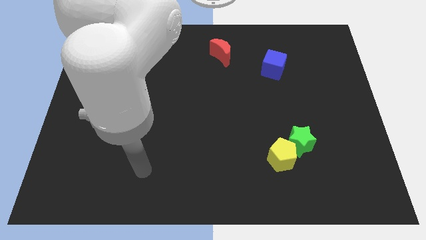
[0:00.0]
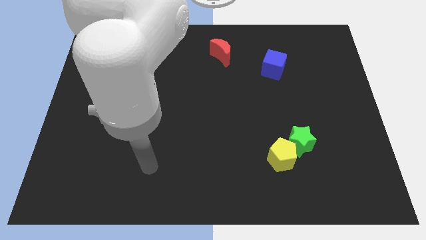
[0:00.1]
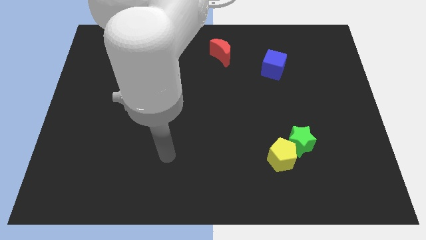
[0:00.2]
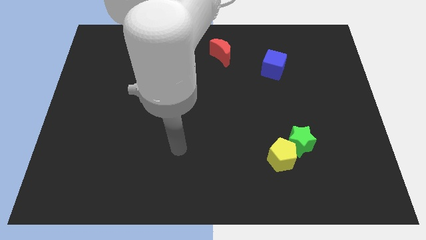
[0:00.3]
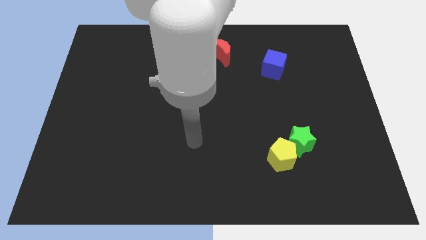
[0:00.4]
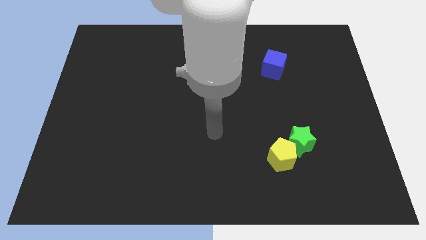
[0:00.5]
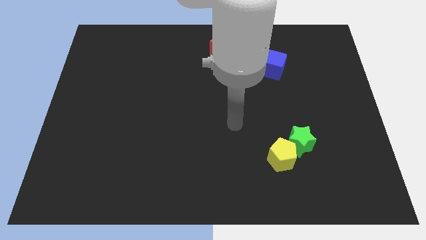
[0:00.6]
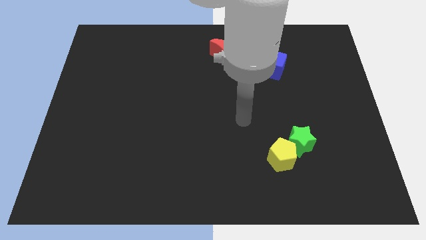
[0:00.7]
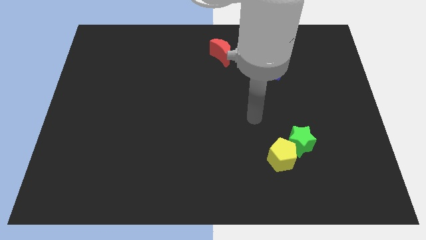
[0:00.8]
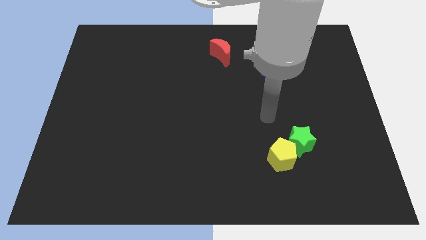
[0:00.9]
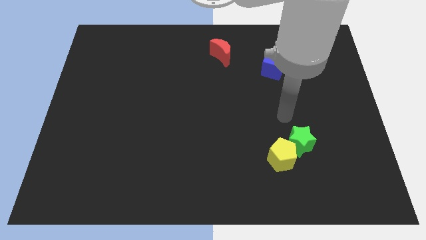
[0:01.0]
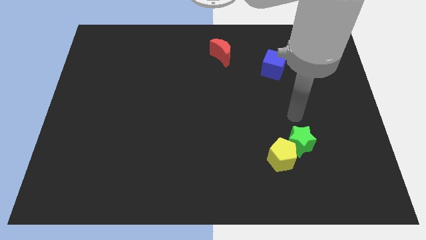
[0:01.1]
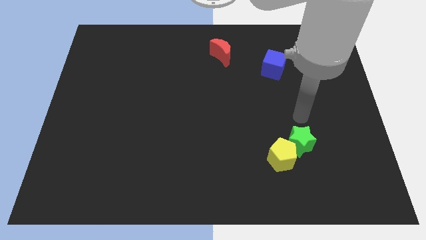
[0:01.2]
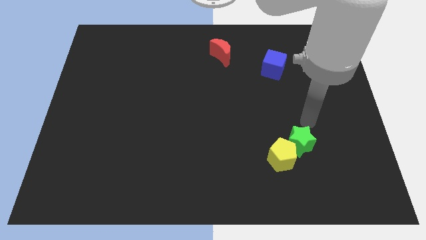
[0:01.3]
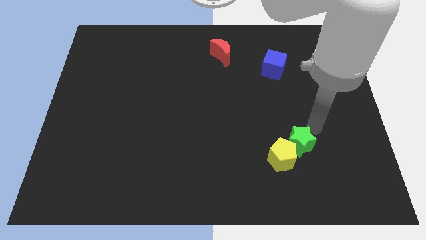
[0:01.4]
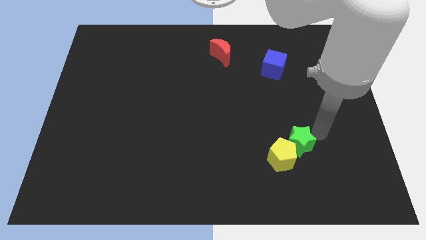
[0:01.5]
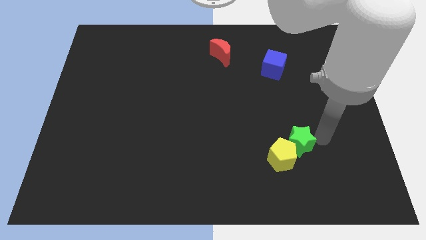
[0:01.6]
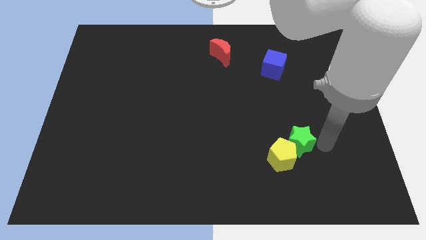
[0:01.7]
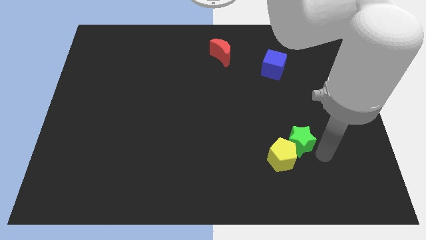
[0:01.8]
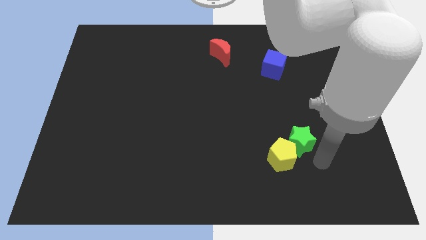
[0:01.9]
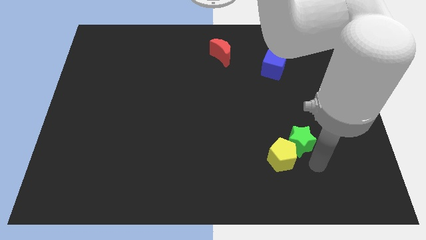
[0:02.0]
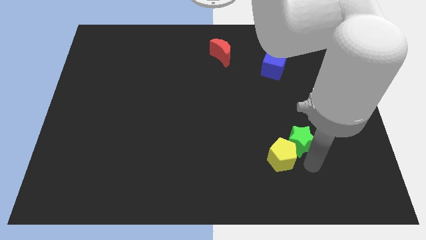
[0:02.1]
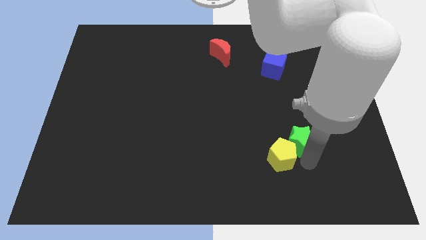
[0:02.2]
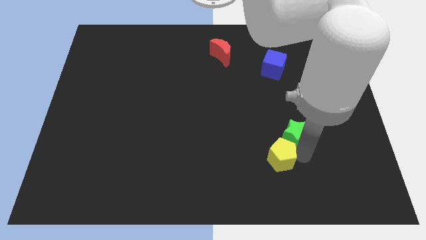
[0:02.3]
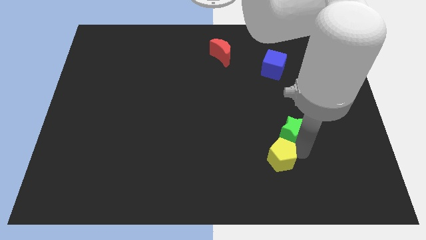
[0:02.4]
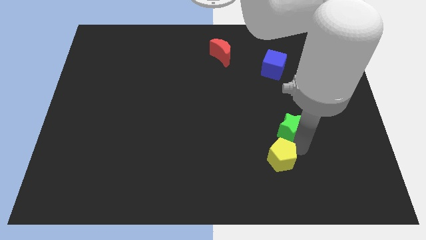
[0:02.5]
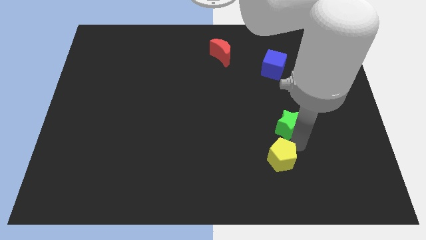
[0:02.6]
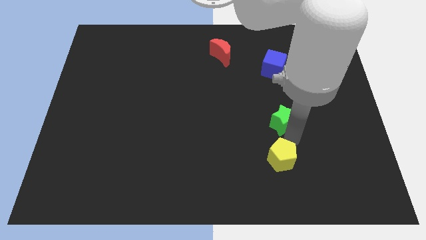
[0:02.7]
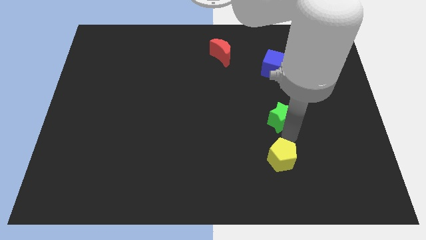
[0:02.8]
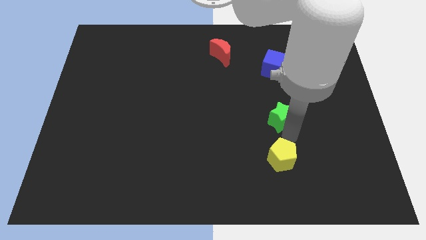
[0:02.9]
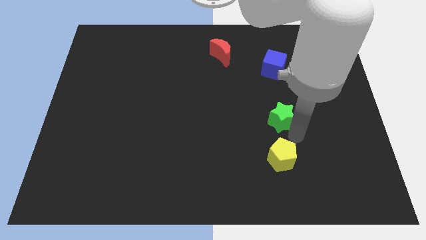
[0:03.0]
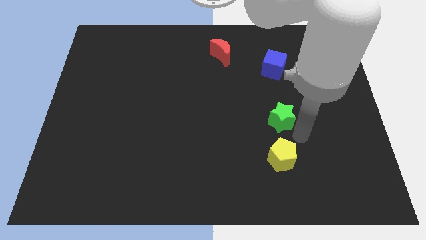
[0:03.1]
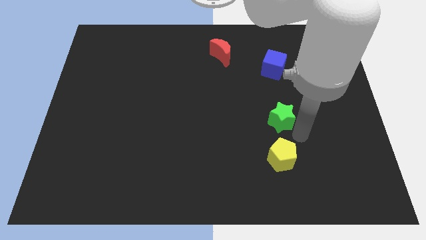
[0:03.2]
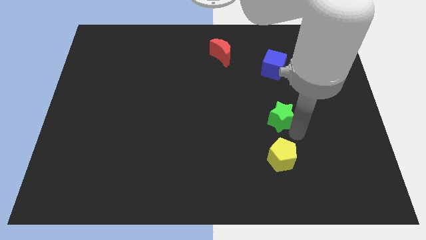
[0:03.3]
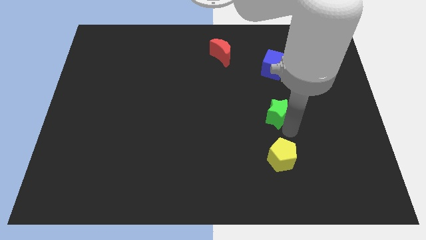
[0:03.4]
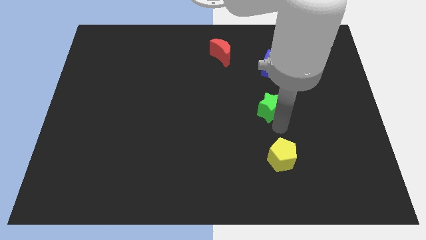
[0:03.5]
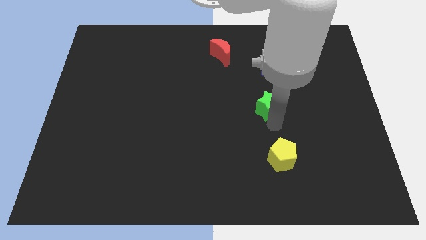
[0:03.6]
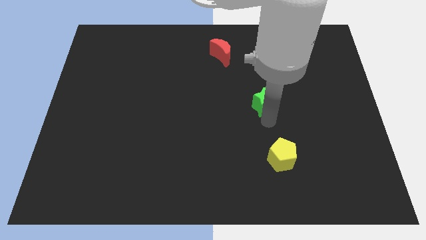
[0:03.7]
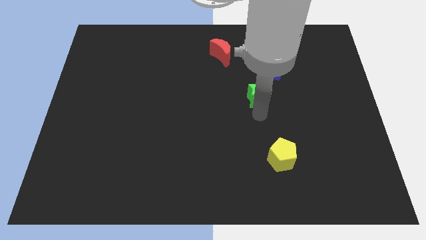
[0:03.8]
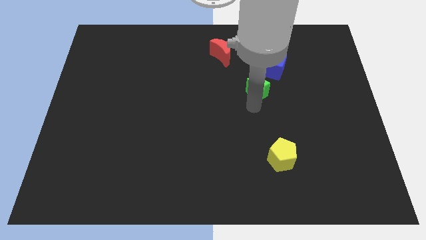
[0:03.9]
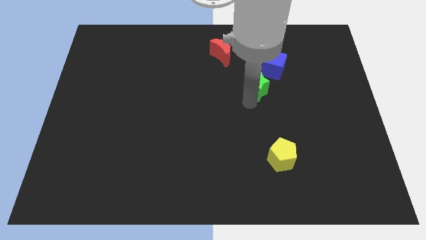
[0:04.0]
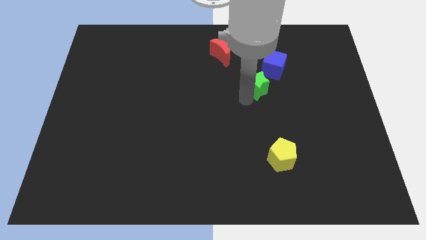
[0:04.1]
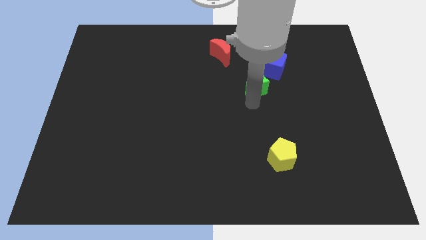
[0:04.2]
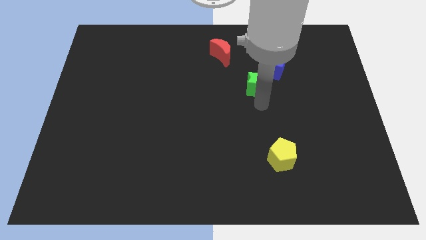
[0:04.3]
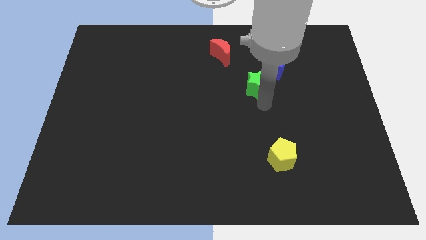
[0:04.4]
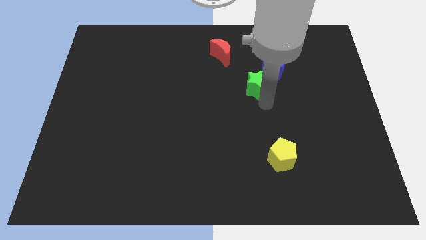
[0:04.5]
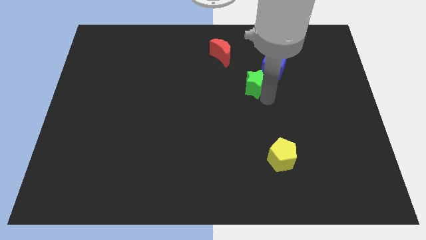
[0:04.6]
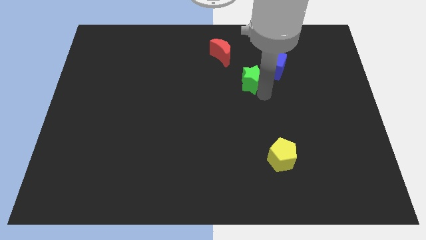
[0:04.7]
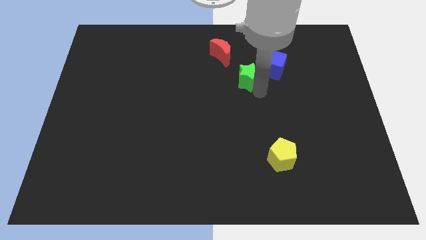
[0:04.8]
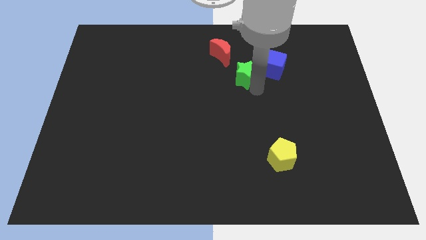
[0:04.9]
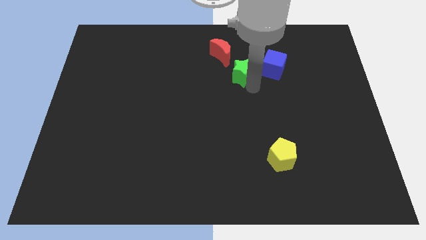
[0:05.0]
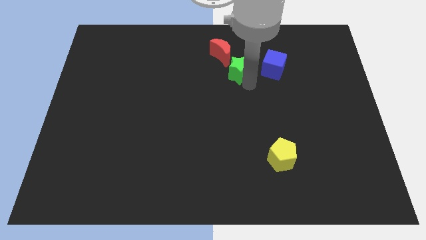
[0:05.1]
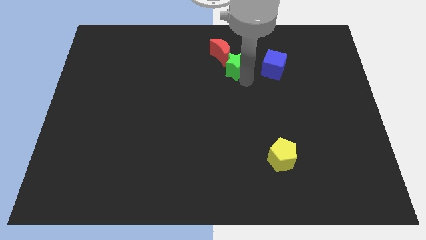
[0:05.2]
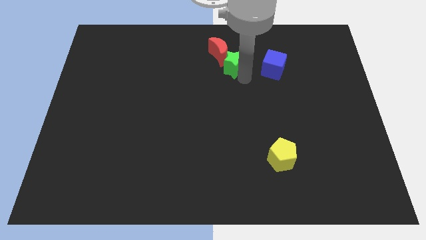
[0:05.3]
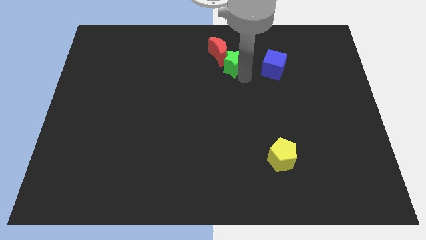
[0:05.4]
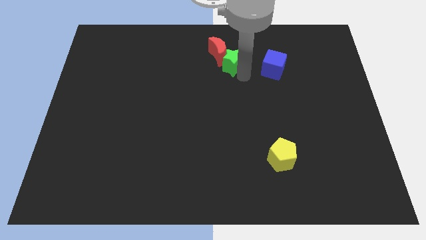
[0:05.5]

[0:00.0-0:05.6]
move the green block towards the red moon

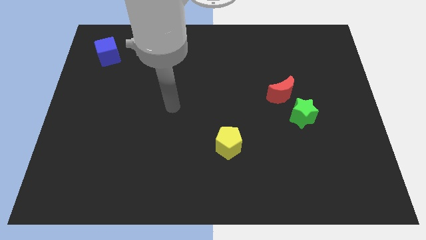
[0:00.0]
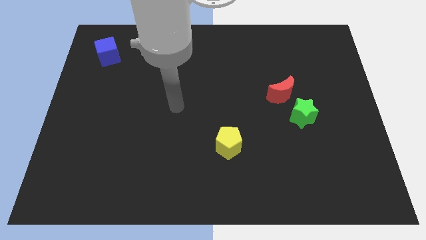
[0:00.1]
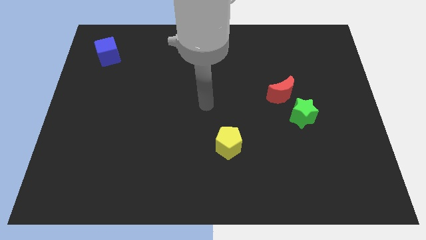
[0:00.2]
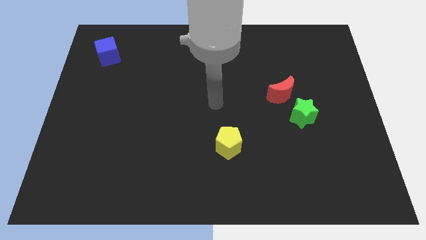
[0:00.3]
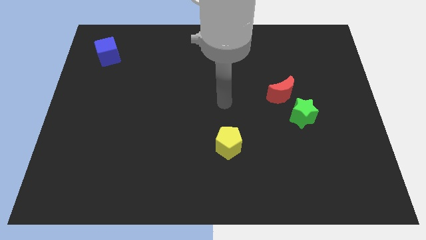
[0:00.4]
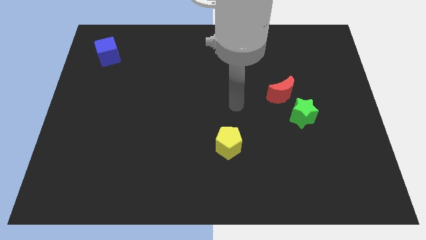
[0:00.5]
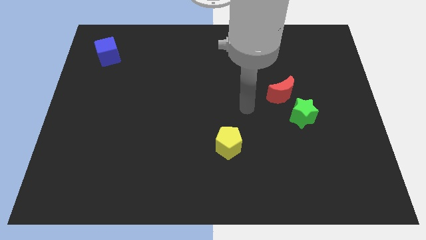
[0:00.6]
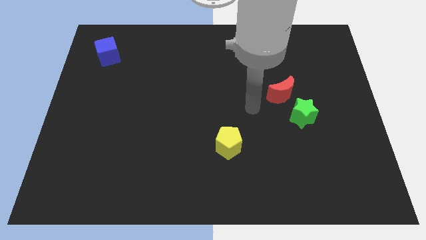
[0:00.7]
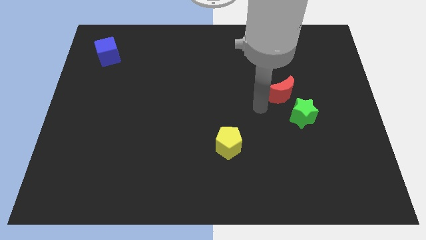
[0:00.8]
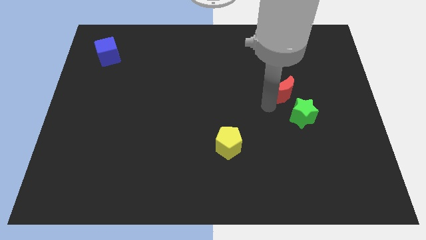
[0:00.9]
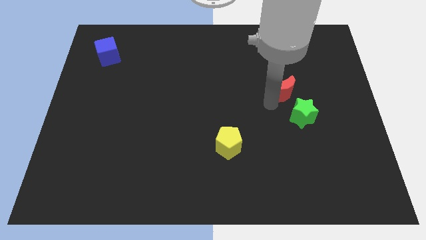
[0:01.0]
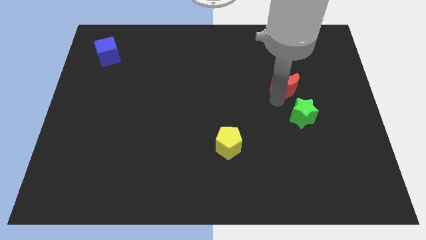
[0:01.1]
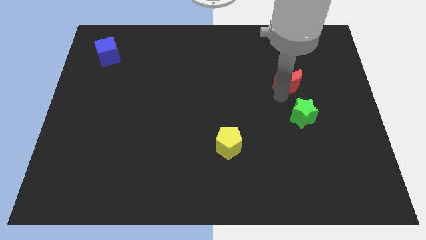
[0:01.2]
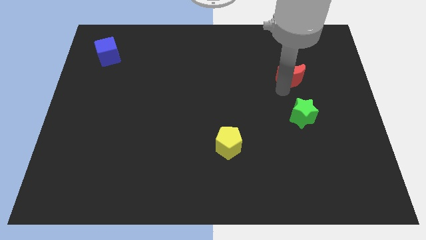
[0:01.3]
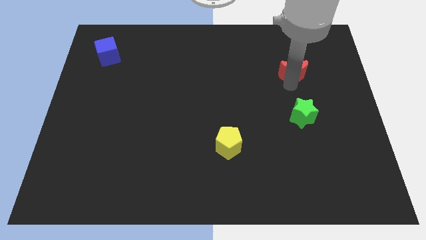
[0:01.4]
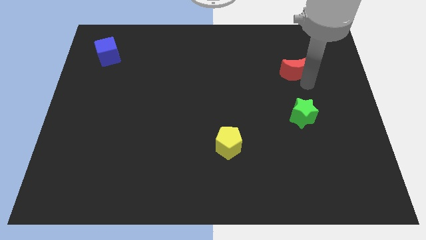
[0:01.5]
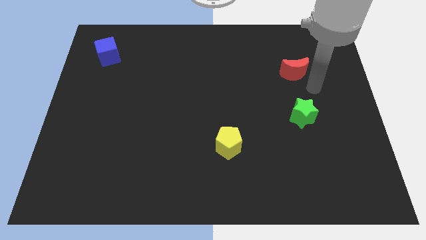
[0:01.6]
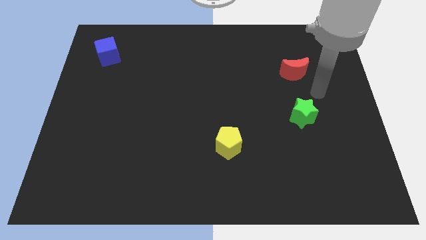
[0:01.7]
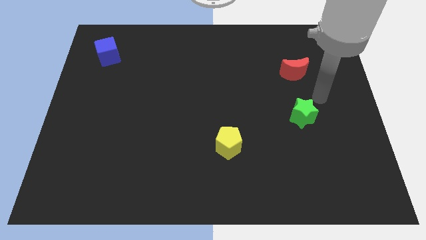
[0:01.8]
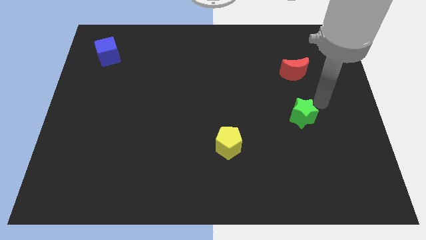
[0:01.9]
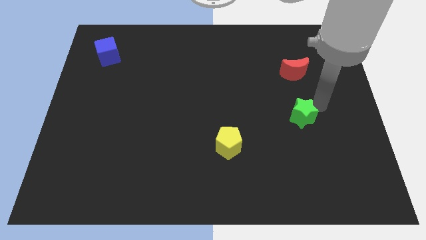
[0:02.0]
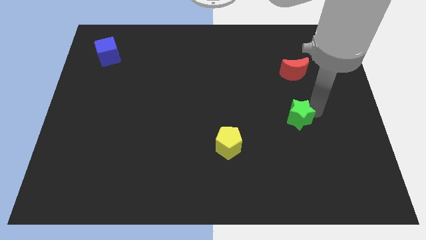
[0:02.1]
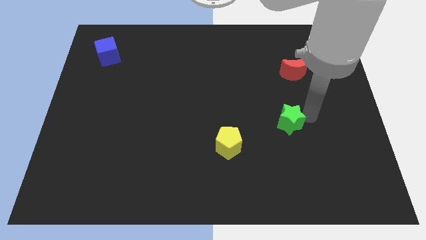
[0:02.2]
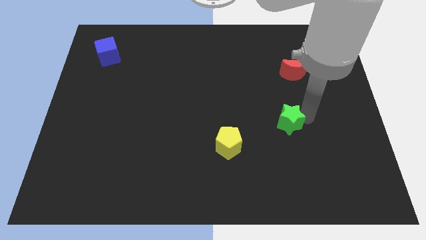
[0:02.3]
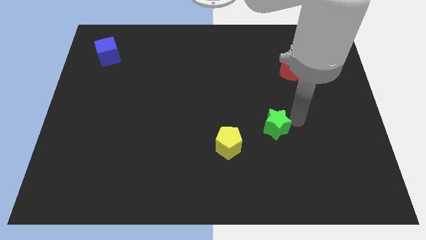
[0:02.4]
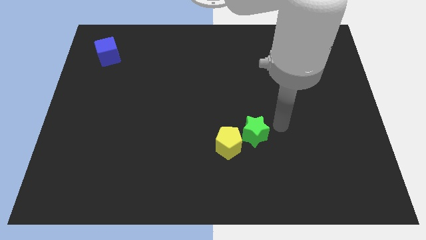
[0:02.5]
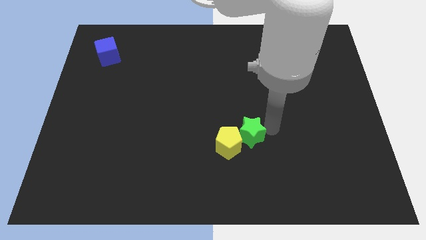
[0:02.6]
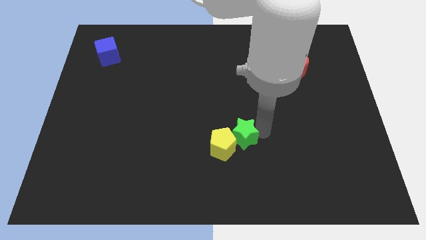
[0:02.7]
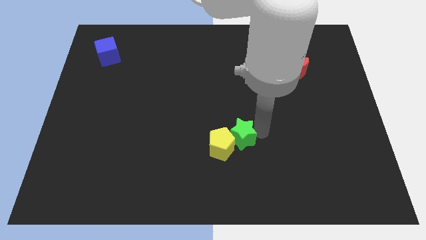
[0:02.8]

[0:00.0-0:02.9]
move the green star close to the pentagon
